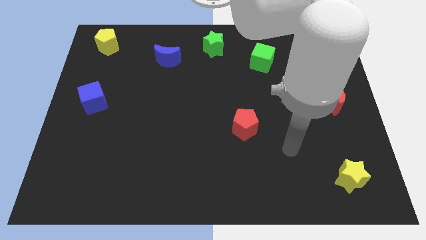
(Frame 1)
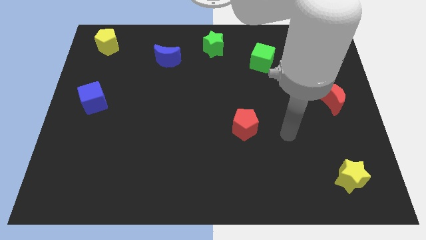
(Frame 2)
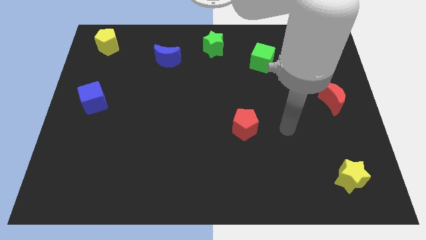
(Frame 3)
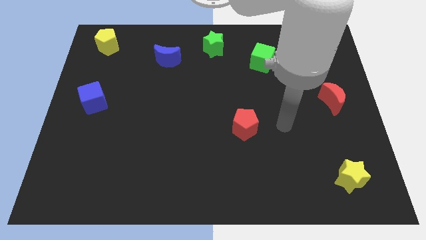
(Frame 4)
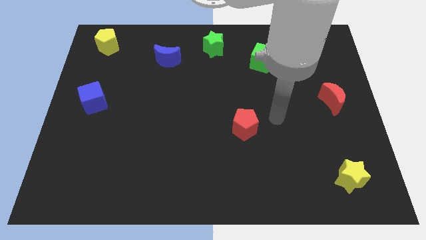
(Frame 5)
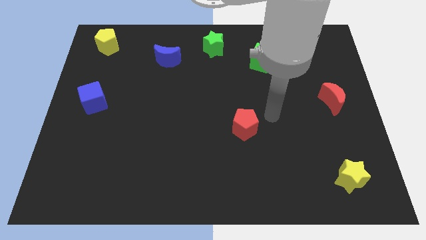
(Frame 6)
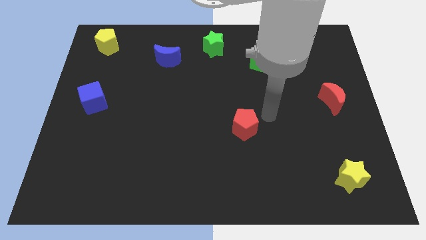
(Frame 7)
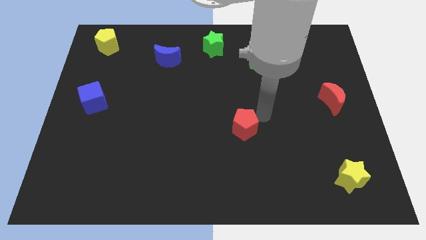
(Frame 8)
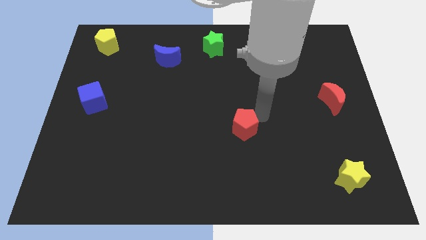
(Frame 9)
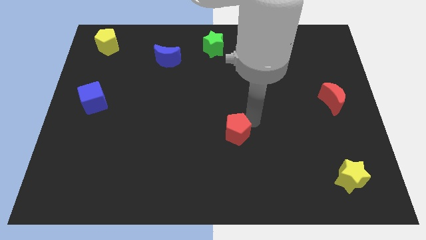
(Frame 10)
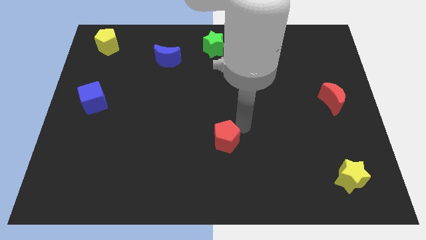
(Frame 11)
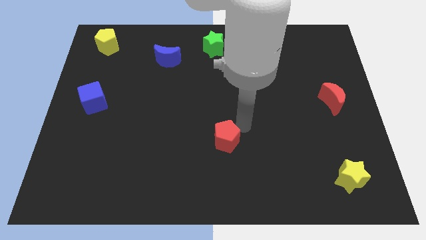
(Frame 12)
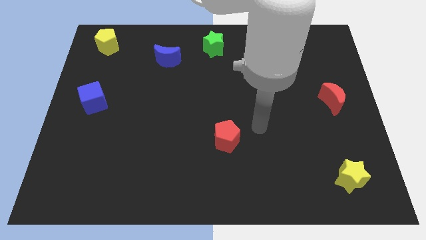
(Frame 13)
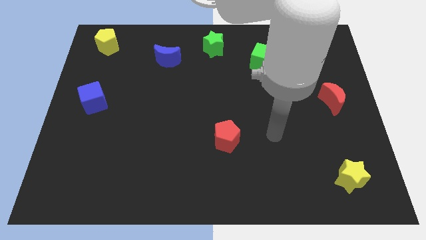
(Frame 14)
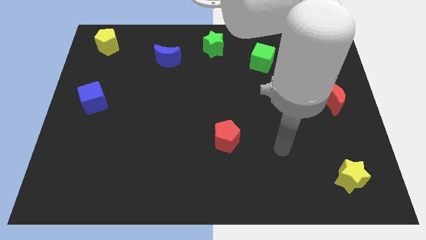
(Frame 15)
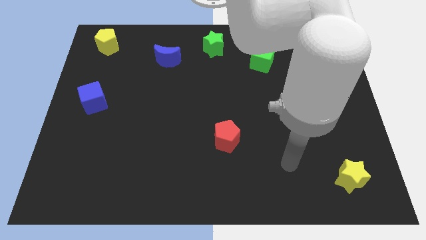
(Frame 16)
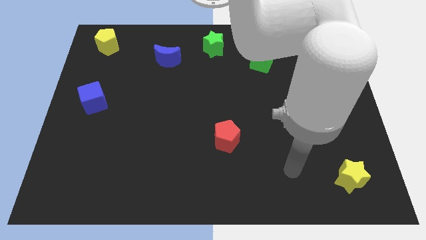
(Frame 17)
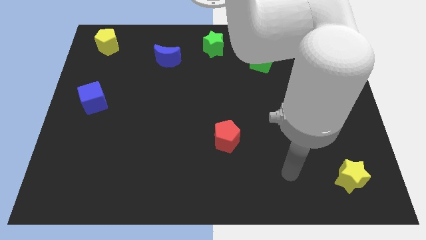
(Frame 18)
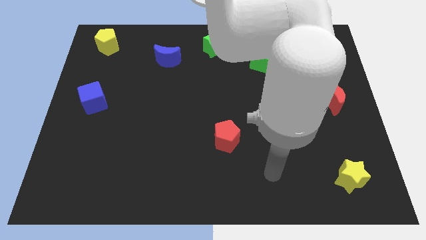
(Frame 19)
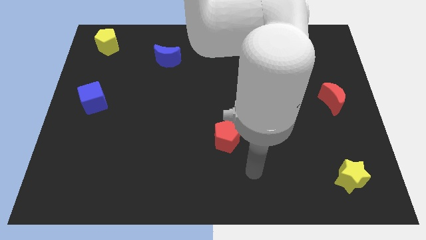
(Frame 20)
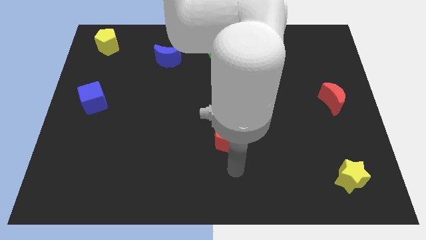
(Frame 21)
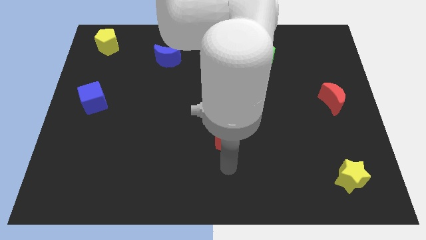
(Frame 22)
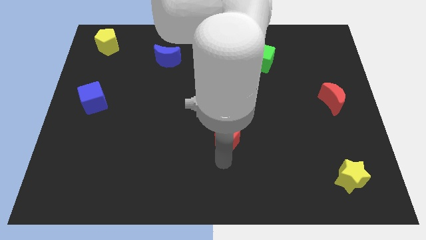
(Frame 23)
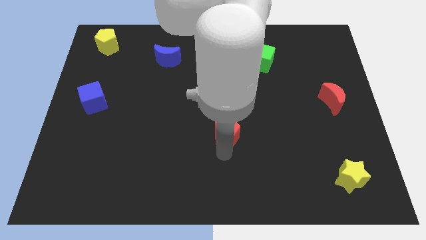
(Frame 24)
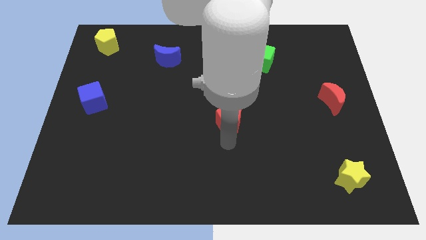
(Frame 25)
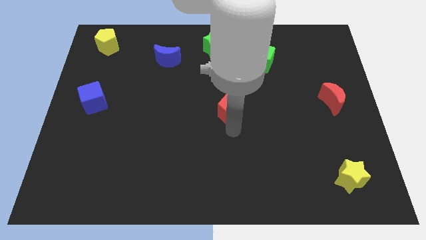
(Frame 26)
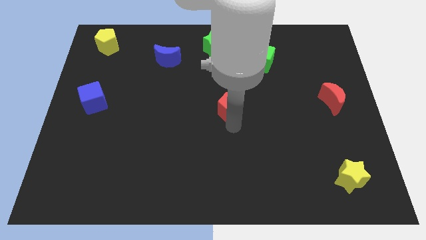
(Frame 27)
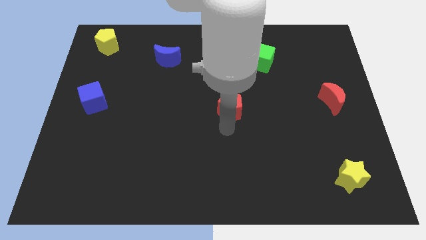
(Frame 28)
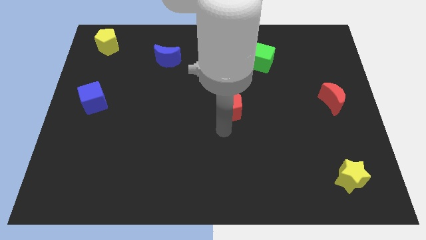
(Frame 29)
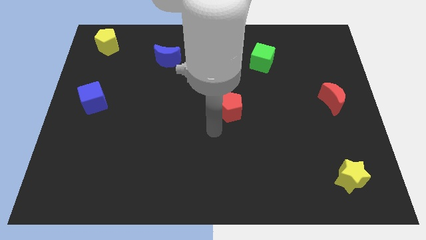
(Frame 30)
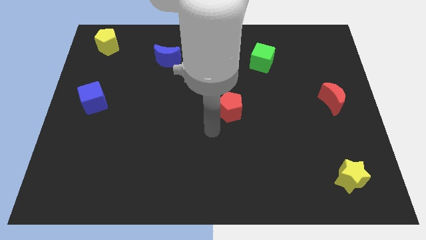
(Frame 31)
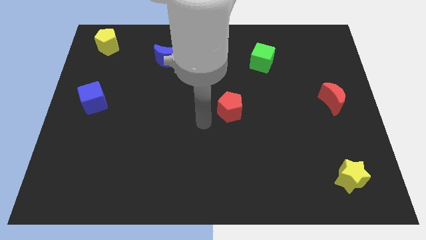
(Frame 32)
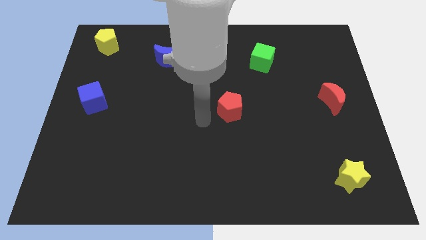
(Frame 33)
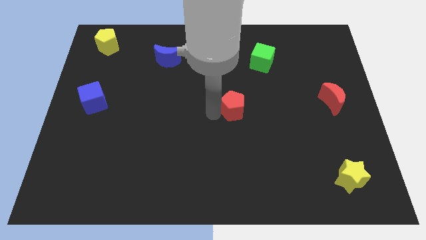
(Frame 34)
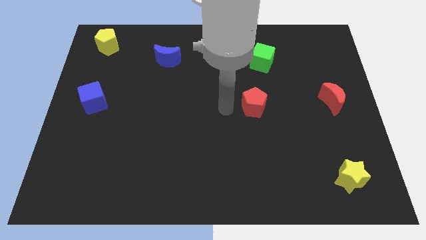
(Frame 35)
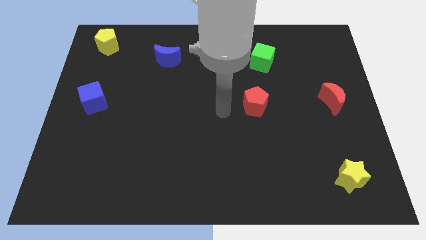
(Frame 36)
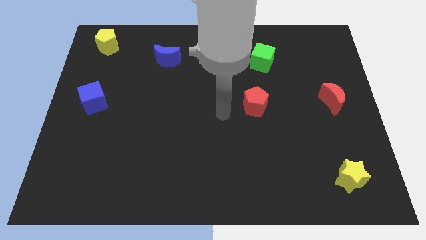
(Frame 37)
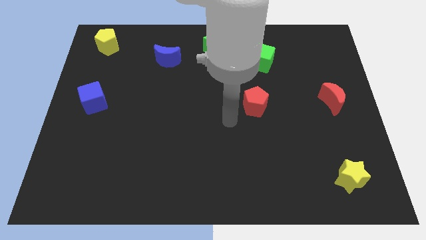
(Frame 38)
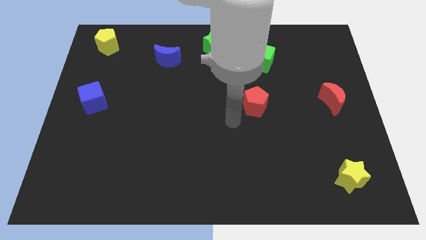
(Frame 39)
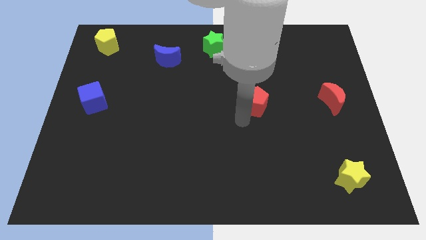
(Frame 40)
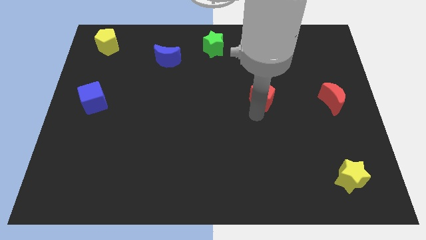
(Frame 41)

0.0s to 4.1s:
push the red pentagon to the bottom of the green cube

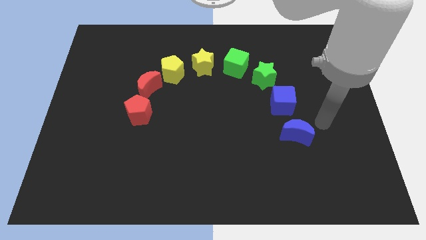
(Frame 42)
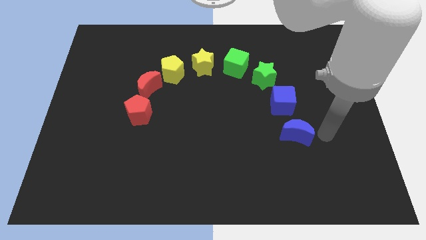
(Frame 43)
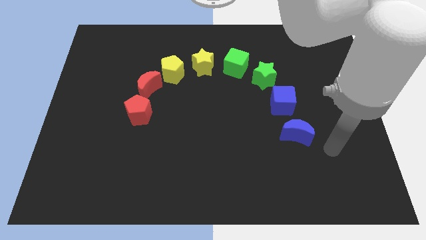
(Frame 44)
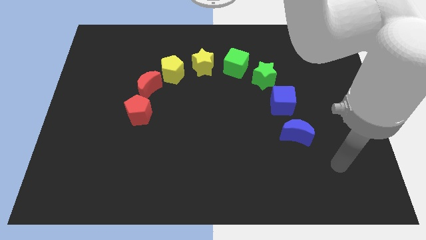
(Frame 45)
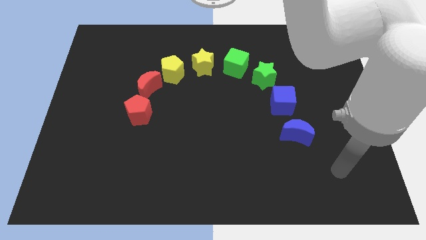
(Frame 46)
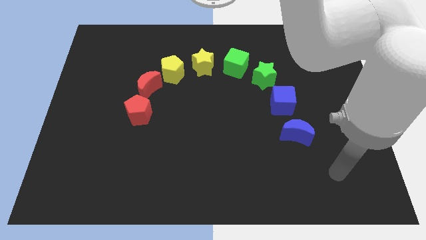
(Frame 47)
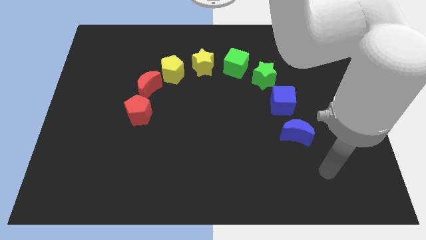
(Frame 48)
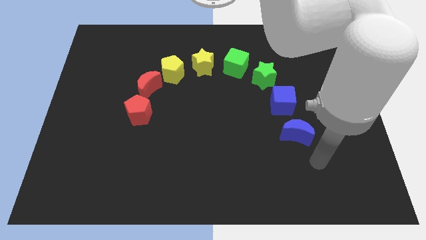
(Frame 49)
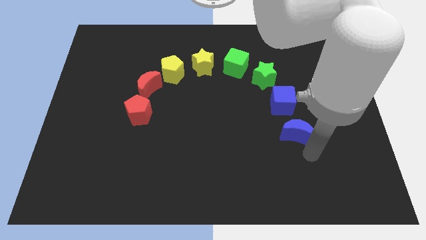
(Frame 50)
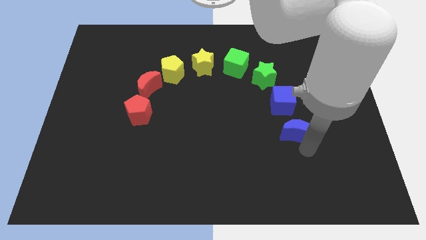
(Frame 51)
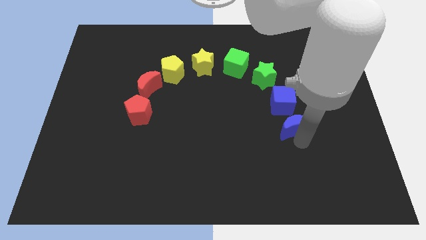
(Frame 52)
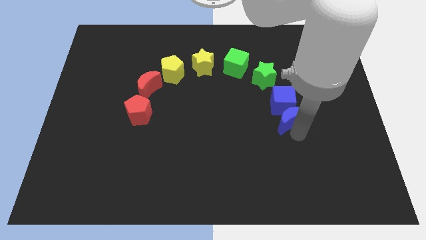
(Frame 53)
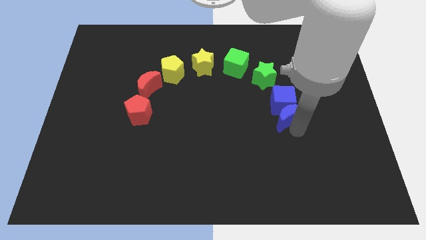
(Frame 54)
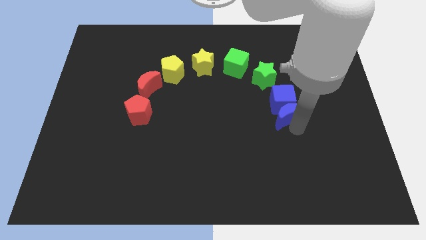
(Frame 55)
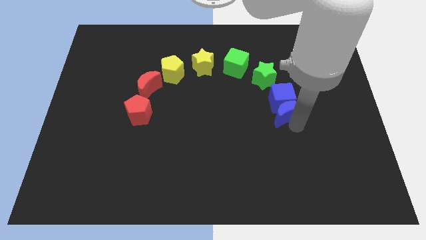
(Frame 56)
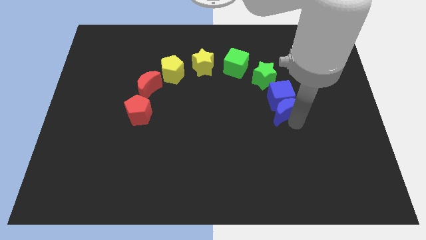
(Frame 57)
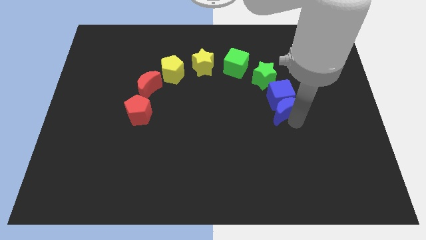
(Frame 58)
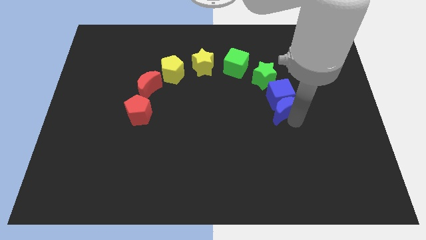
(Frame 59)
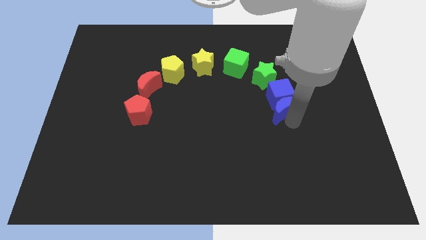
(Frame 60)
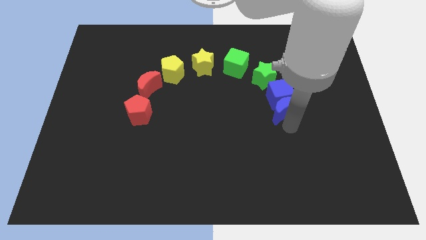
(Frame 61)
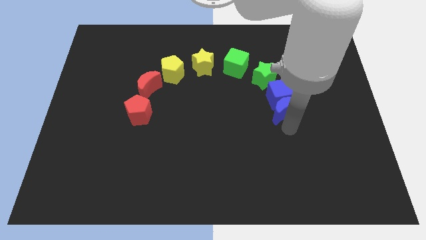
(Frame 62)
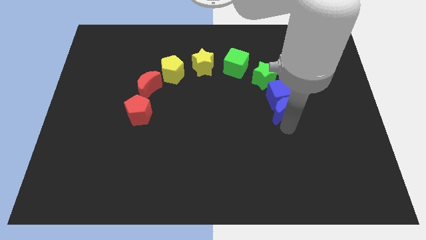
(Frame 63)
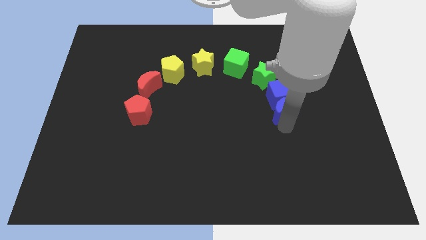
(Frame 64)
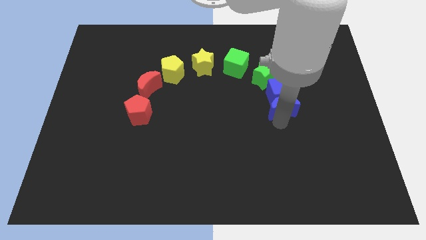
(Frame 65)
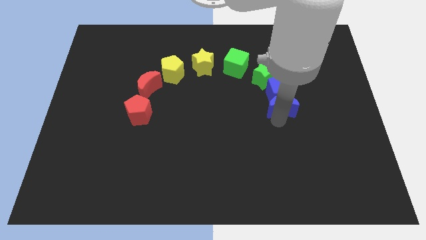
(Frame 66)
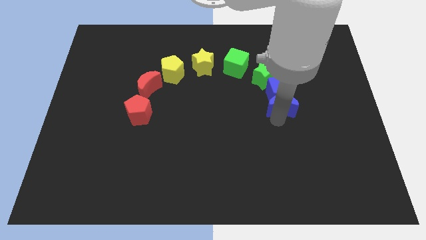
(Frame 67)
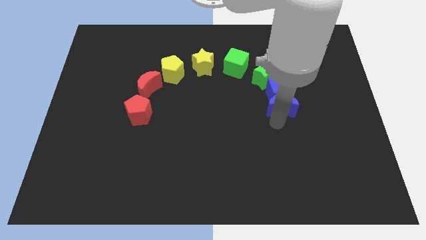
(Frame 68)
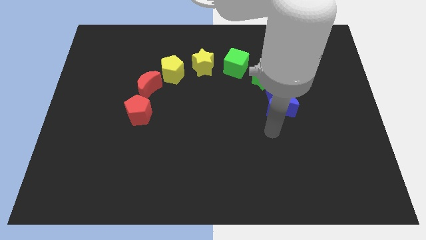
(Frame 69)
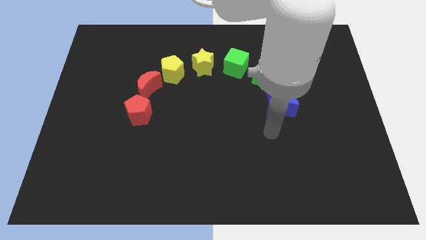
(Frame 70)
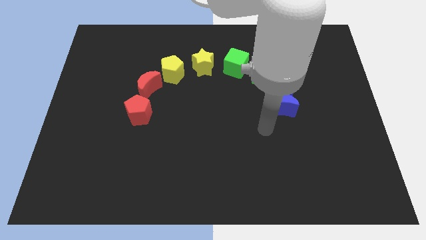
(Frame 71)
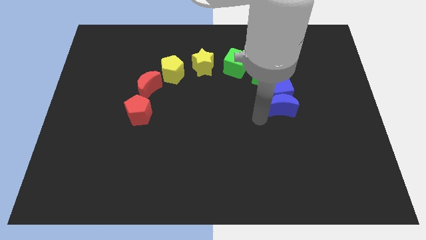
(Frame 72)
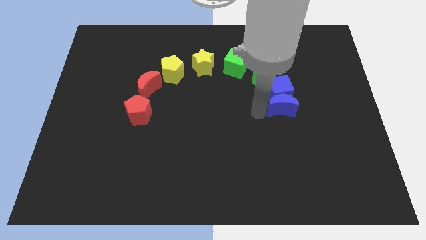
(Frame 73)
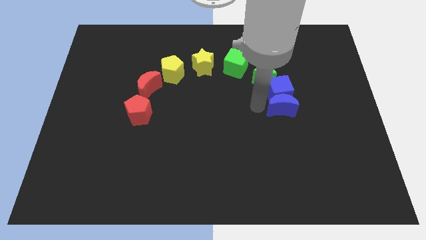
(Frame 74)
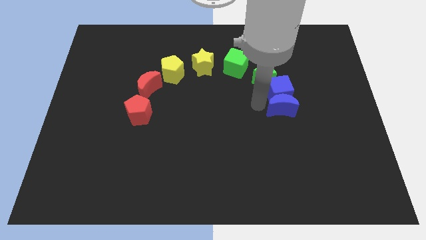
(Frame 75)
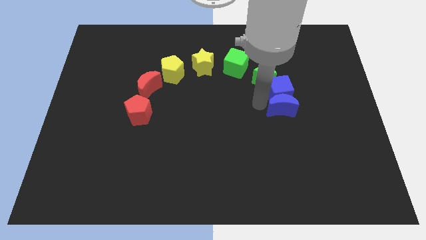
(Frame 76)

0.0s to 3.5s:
slide the blue blocks towards the bottom side of the green star

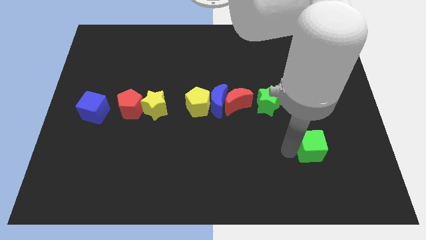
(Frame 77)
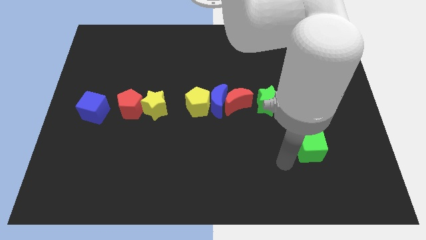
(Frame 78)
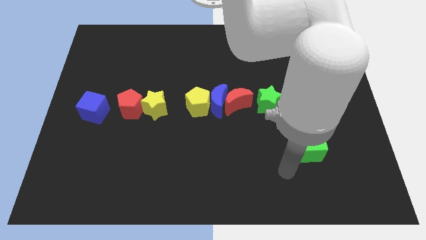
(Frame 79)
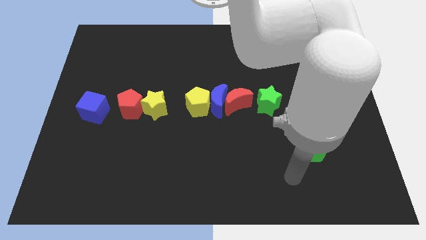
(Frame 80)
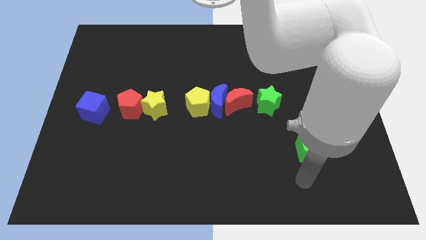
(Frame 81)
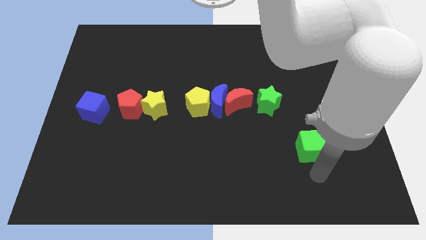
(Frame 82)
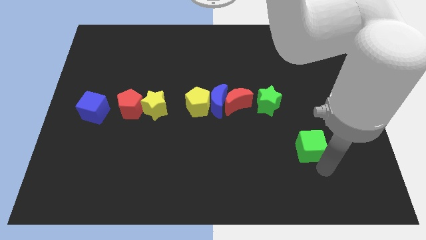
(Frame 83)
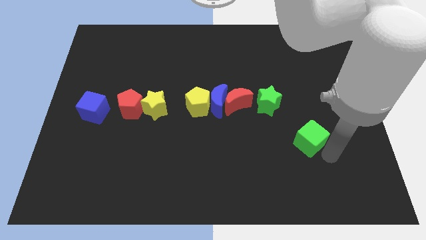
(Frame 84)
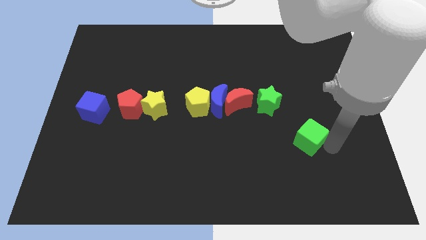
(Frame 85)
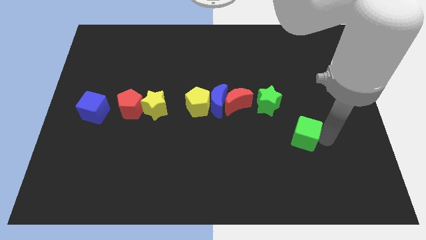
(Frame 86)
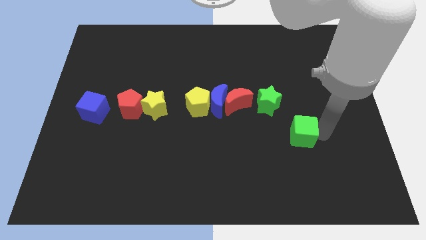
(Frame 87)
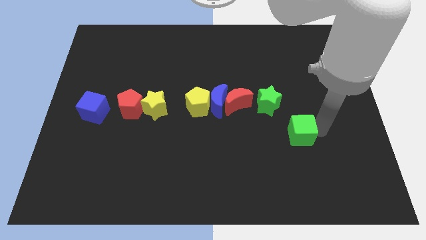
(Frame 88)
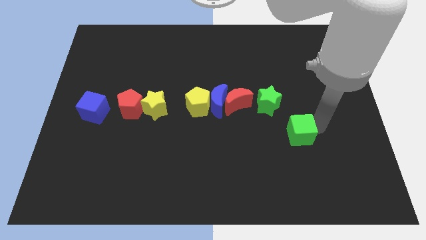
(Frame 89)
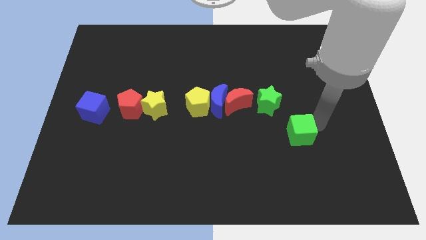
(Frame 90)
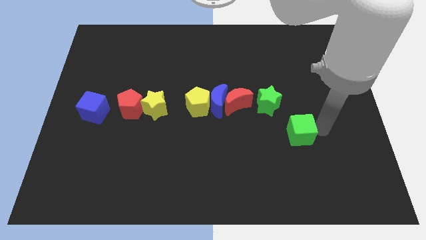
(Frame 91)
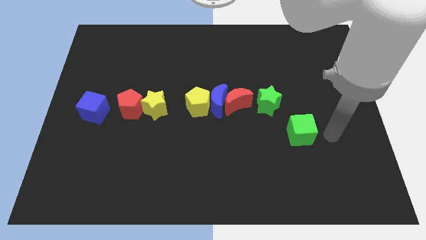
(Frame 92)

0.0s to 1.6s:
put the green cube diagonally to the bottom right of the green star
